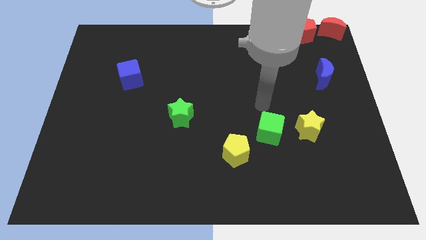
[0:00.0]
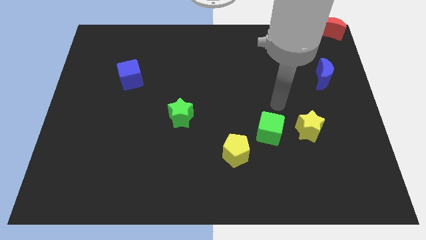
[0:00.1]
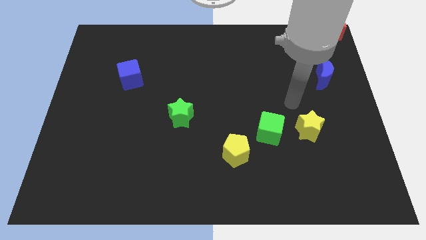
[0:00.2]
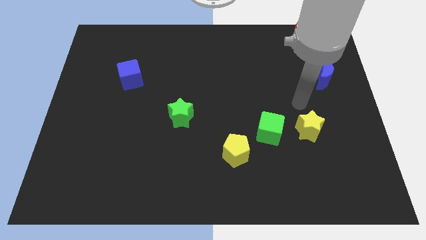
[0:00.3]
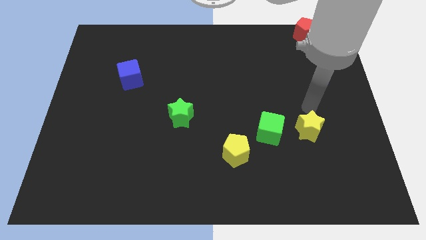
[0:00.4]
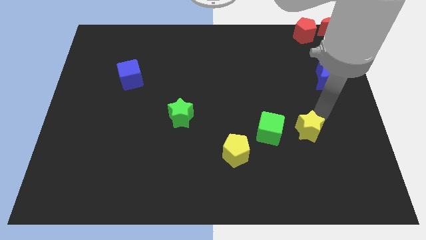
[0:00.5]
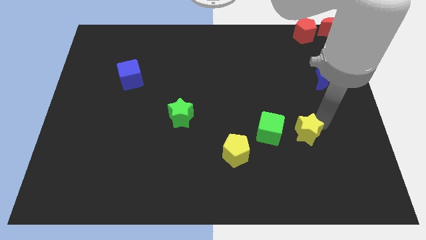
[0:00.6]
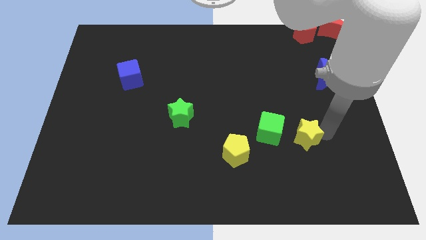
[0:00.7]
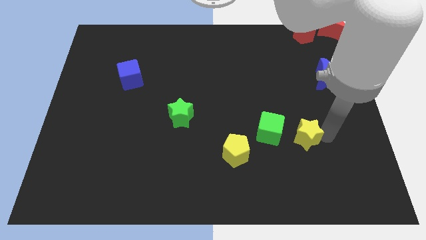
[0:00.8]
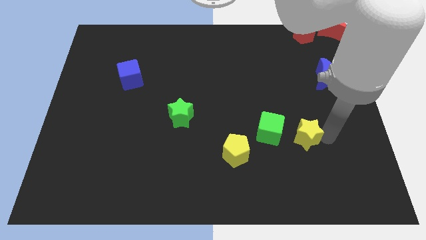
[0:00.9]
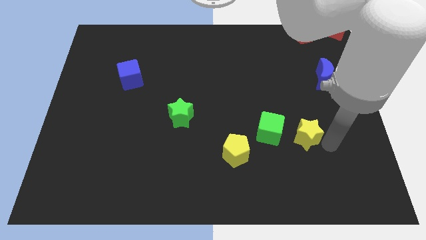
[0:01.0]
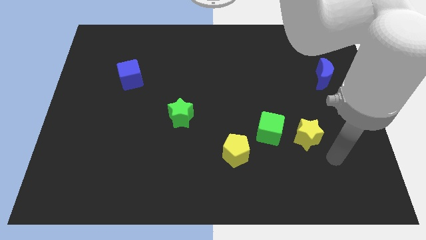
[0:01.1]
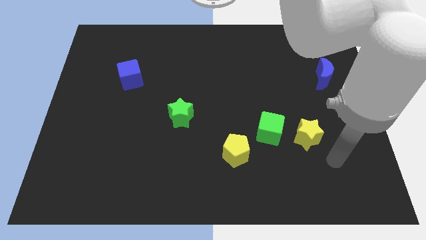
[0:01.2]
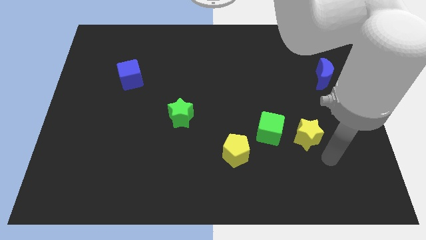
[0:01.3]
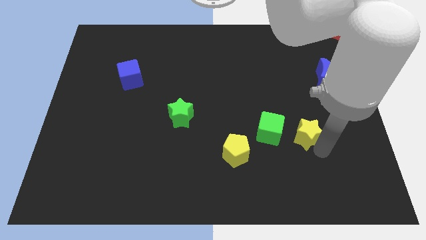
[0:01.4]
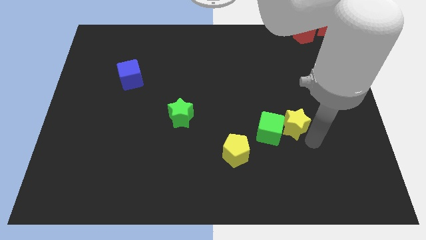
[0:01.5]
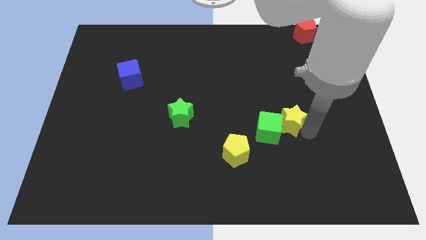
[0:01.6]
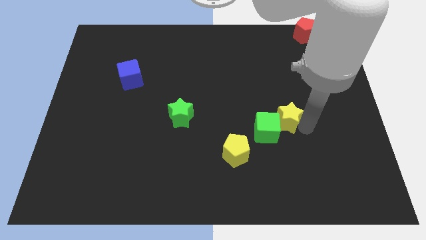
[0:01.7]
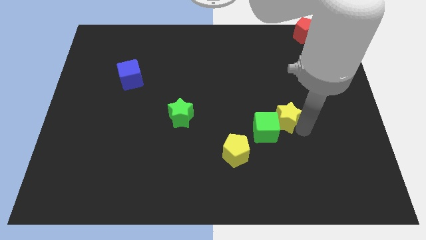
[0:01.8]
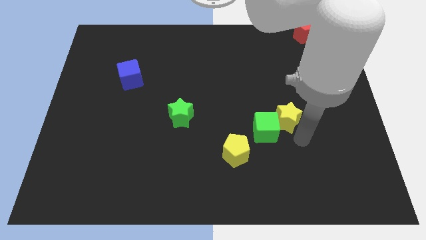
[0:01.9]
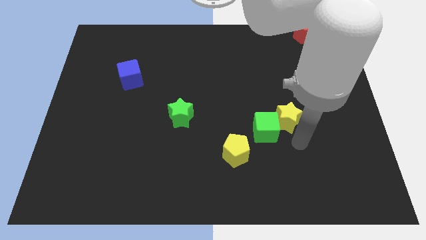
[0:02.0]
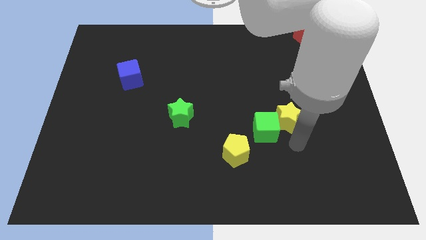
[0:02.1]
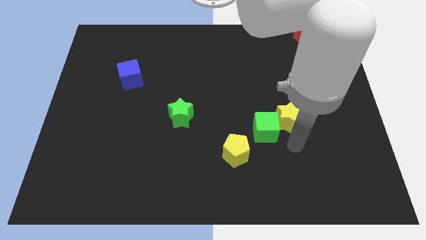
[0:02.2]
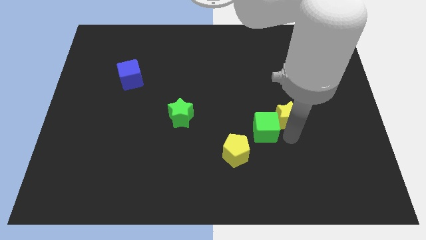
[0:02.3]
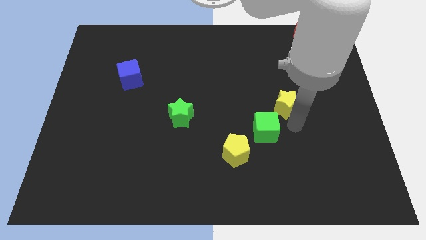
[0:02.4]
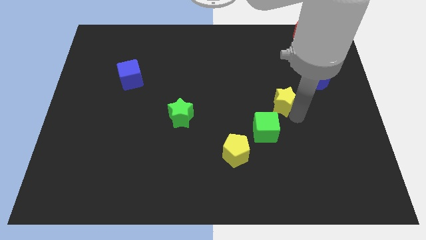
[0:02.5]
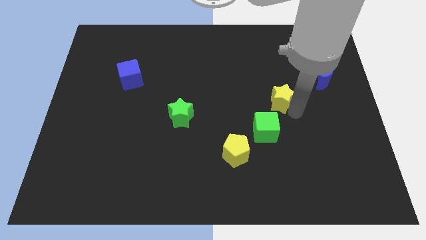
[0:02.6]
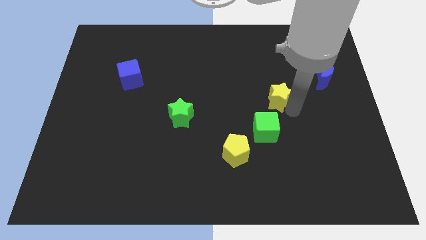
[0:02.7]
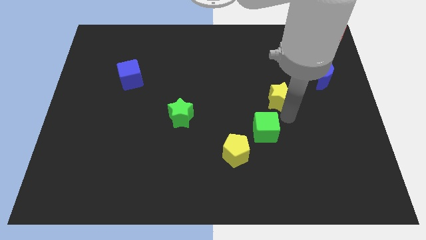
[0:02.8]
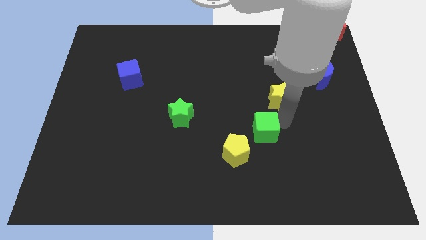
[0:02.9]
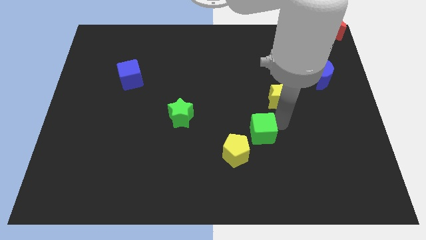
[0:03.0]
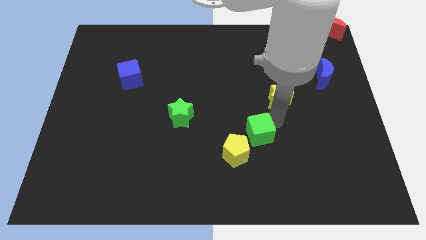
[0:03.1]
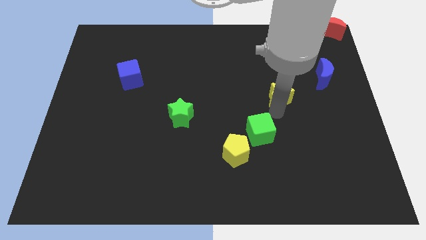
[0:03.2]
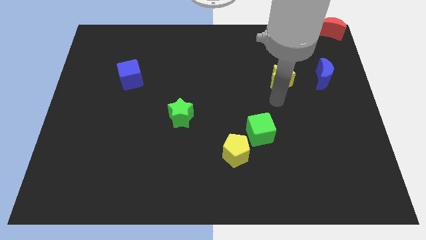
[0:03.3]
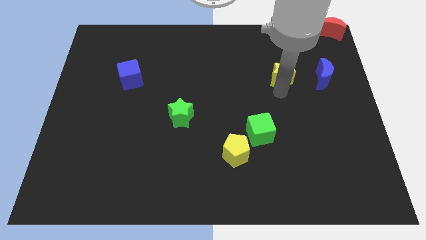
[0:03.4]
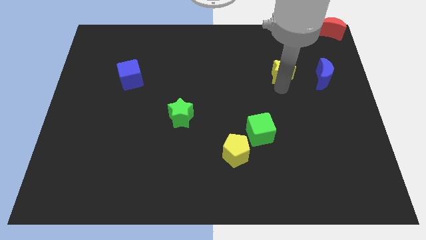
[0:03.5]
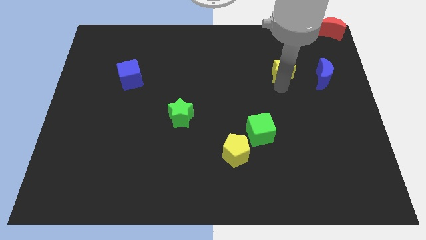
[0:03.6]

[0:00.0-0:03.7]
move the yellow star left to the blue moon

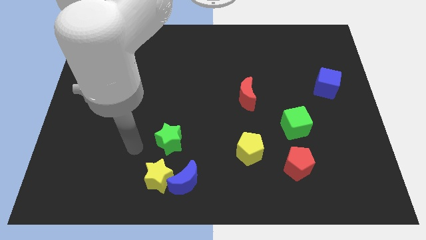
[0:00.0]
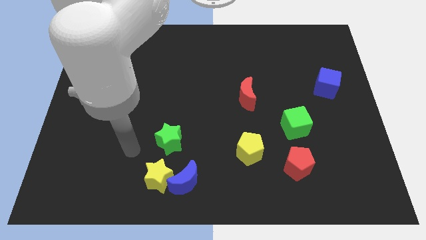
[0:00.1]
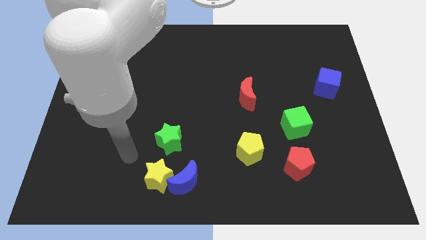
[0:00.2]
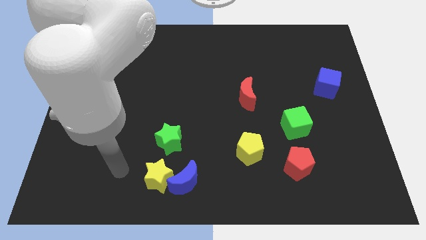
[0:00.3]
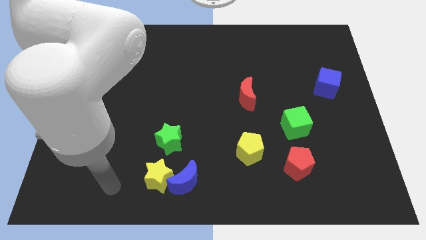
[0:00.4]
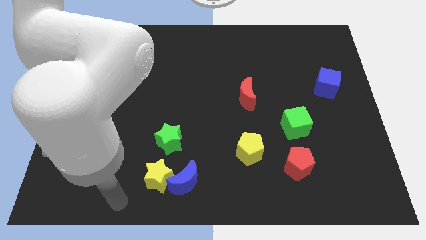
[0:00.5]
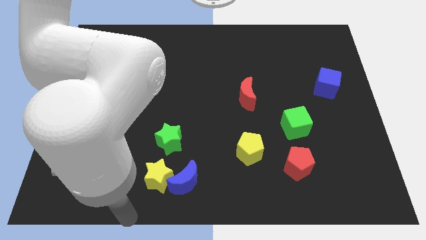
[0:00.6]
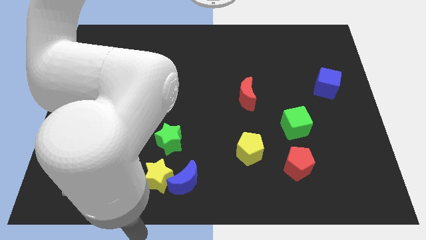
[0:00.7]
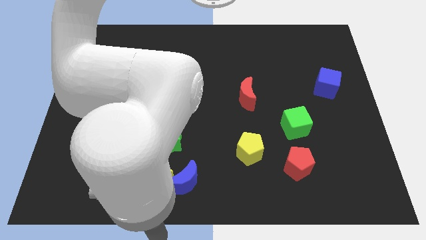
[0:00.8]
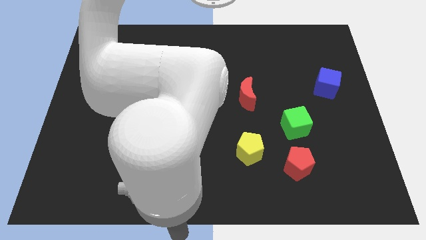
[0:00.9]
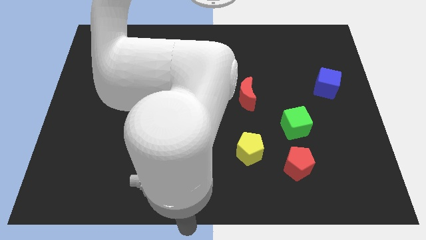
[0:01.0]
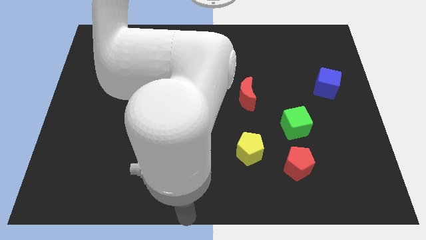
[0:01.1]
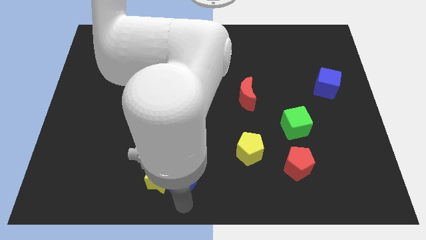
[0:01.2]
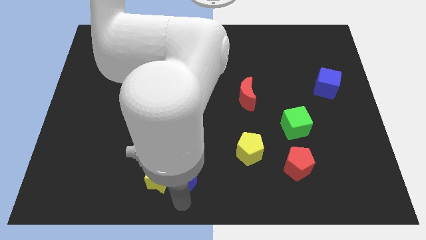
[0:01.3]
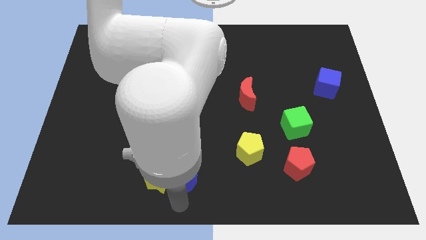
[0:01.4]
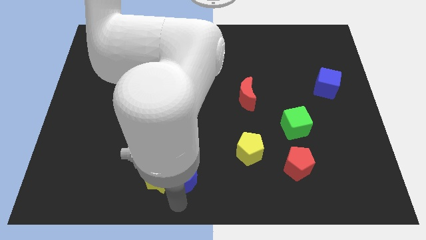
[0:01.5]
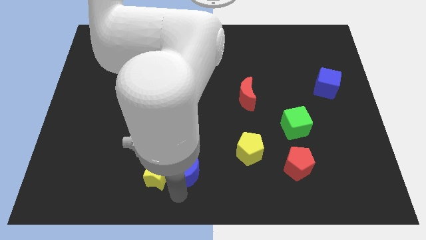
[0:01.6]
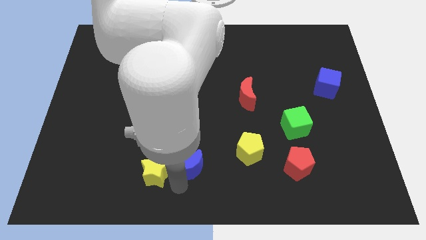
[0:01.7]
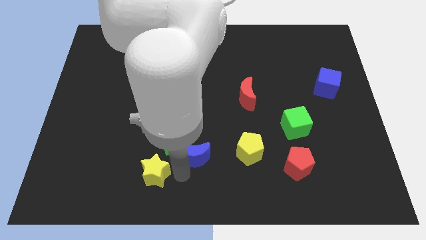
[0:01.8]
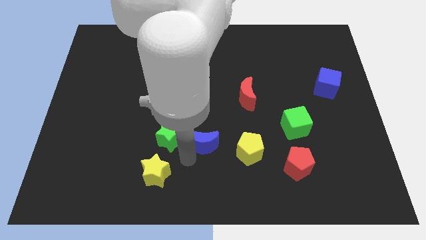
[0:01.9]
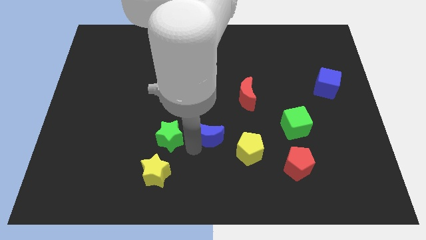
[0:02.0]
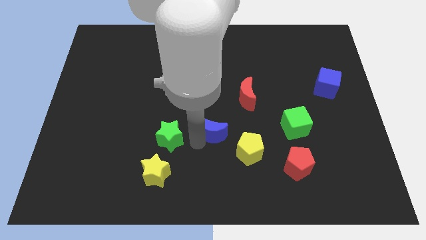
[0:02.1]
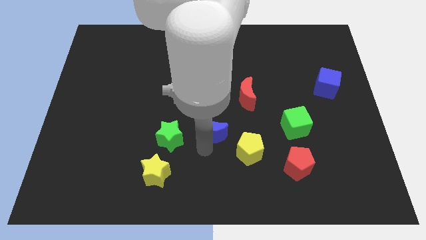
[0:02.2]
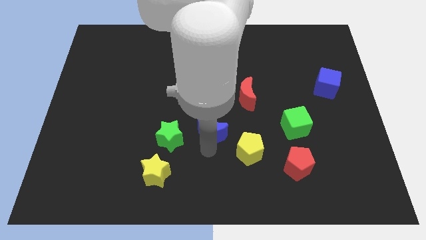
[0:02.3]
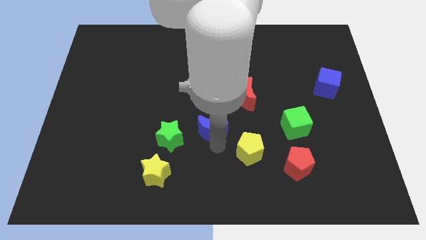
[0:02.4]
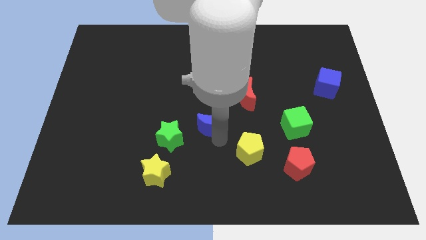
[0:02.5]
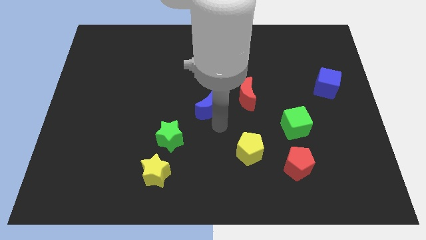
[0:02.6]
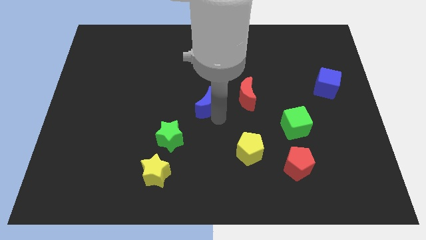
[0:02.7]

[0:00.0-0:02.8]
pull the blue crescent diagonal to the green star

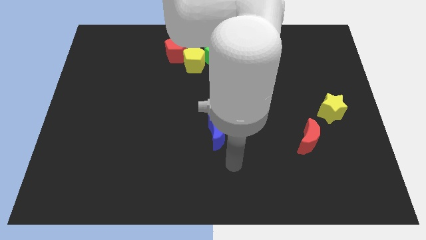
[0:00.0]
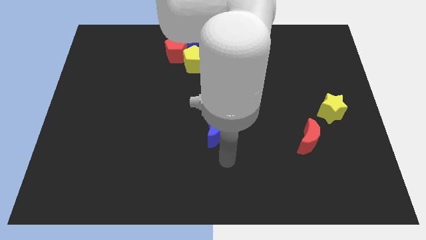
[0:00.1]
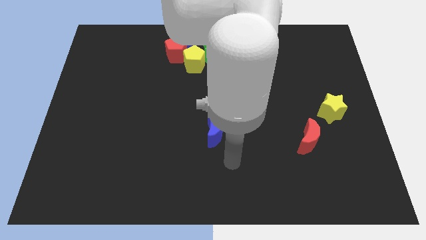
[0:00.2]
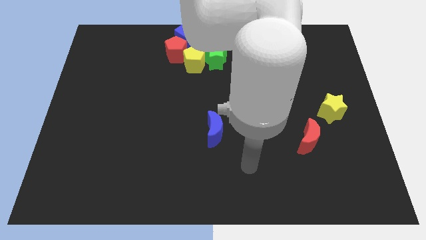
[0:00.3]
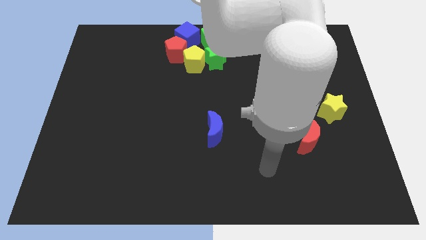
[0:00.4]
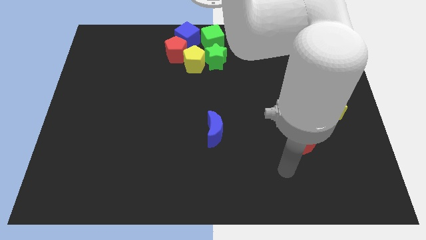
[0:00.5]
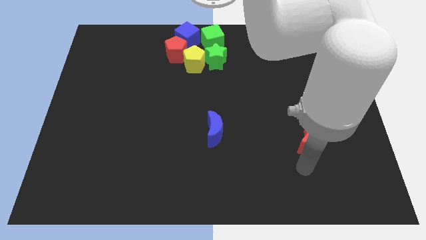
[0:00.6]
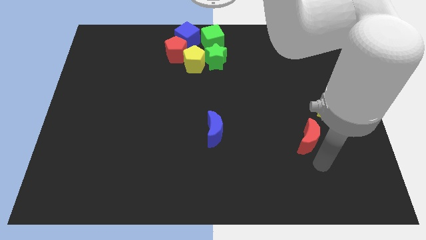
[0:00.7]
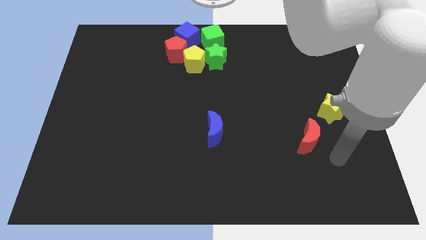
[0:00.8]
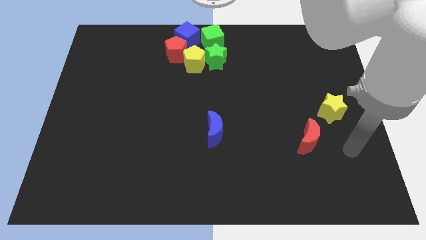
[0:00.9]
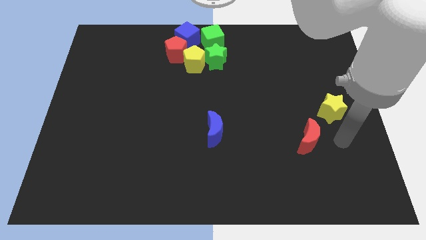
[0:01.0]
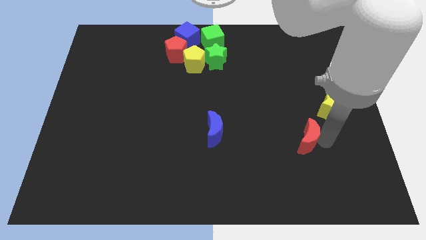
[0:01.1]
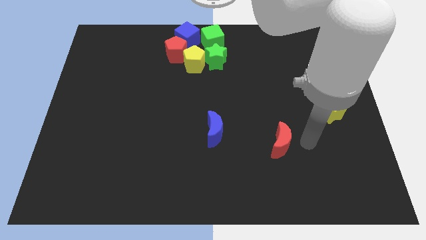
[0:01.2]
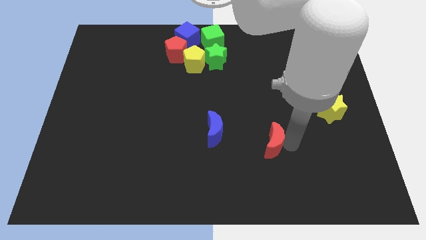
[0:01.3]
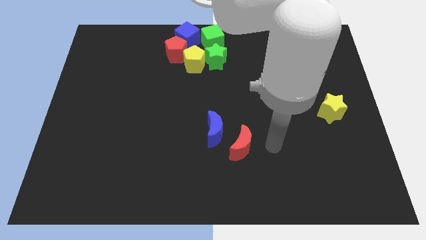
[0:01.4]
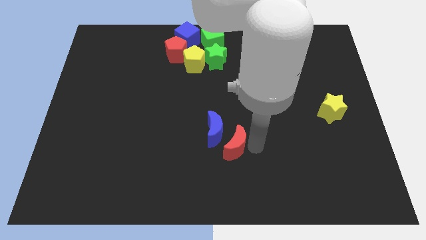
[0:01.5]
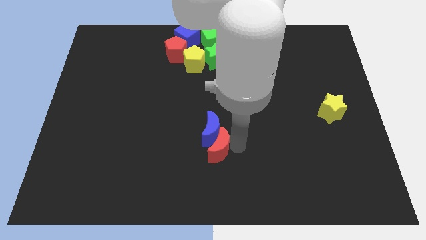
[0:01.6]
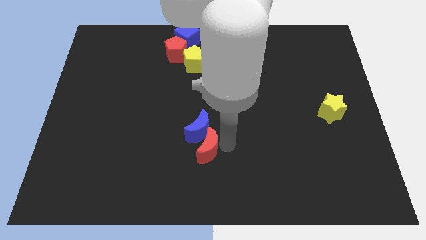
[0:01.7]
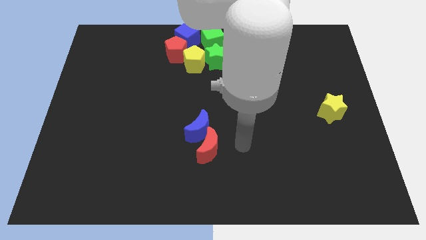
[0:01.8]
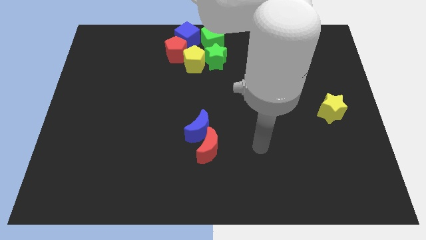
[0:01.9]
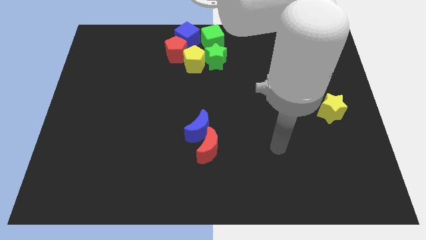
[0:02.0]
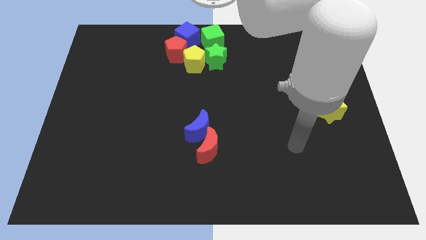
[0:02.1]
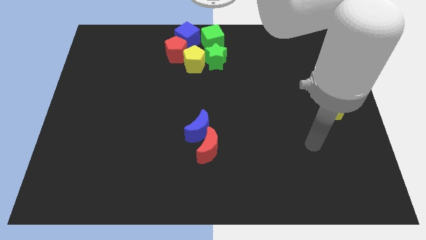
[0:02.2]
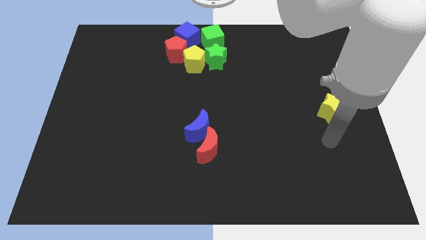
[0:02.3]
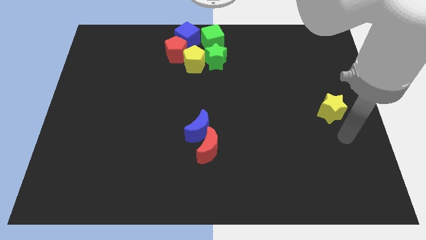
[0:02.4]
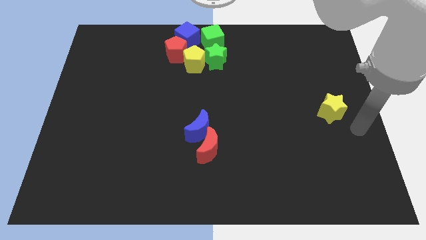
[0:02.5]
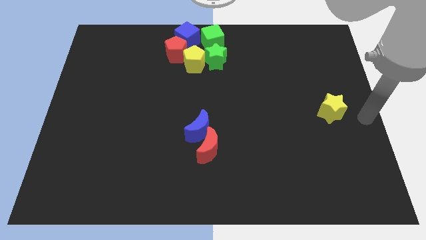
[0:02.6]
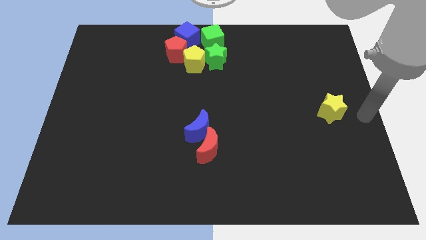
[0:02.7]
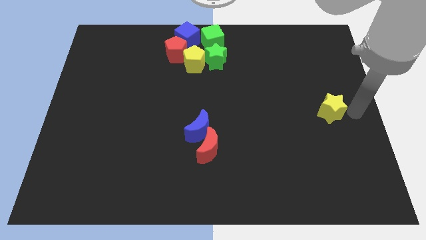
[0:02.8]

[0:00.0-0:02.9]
place the red crescent below right to the blue crescent
